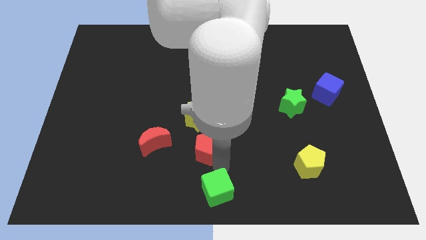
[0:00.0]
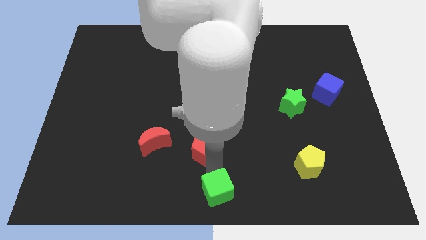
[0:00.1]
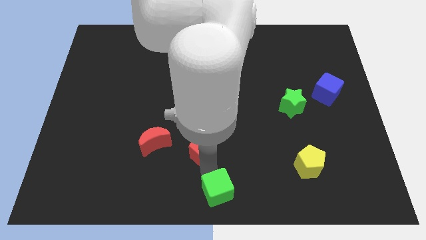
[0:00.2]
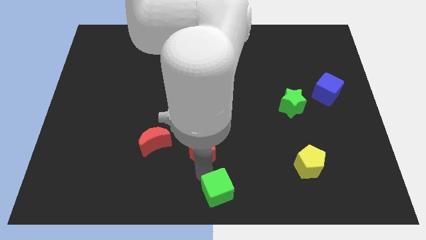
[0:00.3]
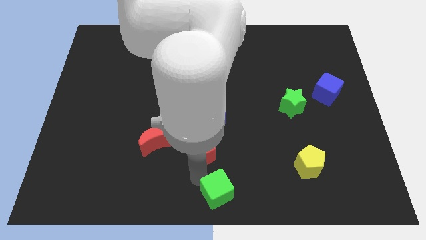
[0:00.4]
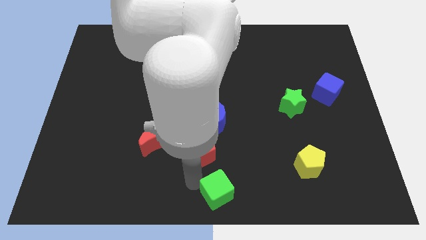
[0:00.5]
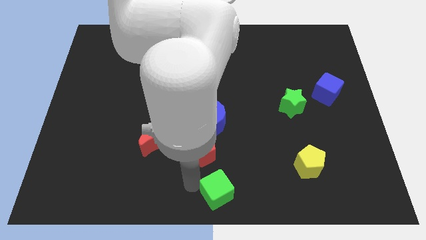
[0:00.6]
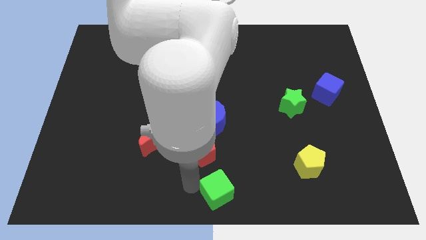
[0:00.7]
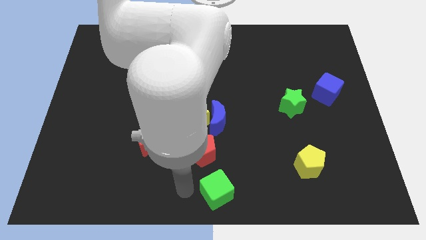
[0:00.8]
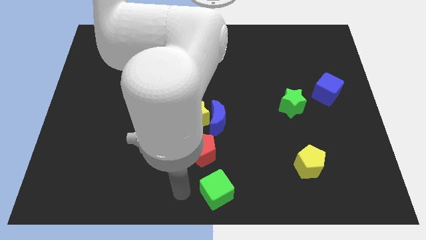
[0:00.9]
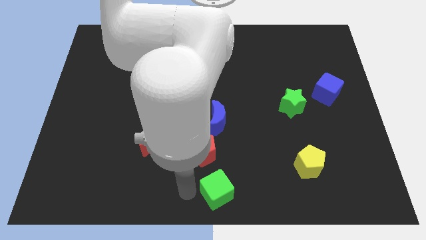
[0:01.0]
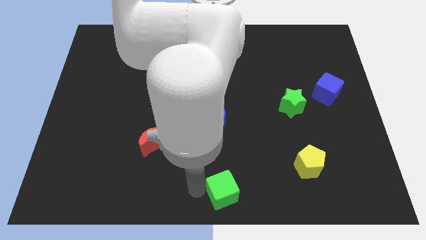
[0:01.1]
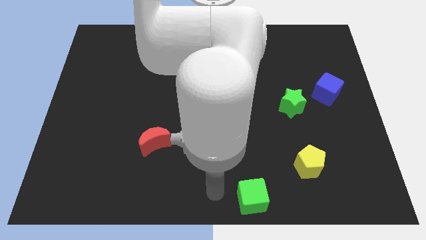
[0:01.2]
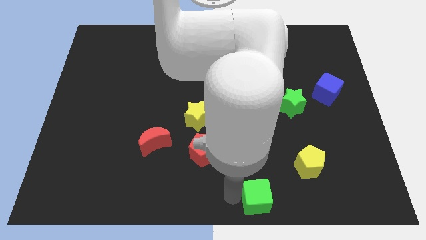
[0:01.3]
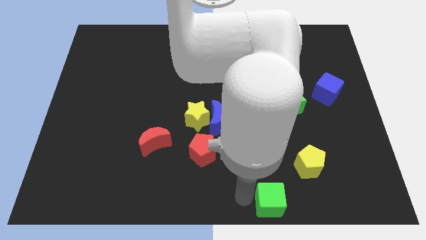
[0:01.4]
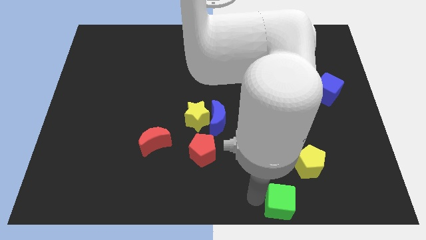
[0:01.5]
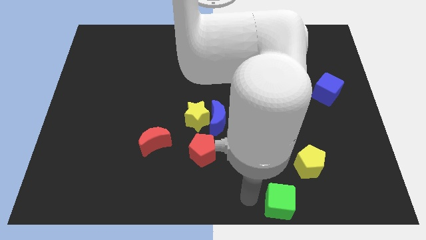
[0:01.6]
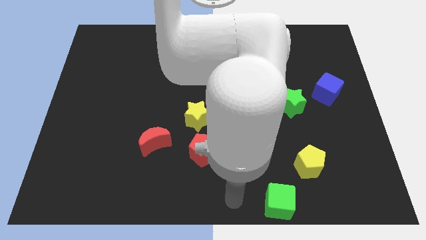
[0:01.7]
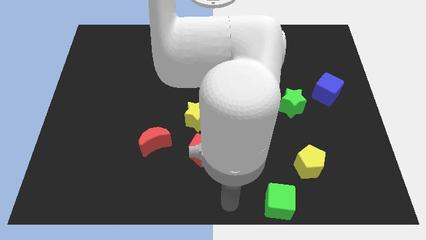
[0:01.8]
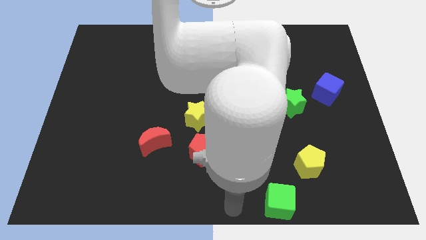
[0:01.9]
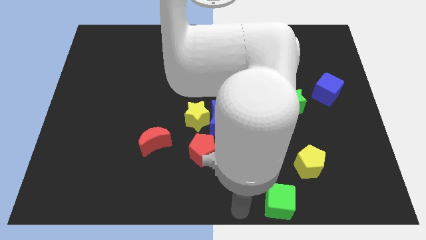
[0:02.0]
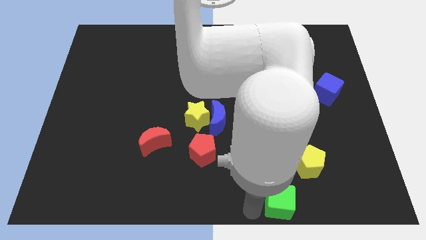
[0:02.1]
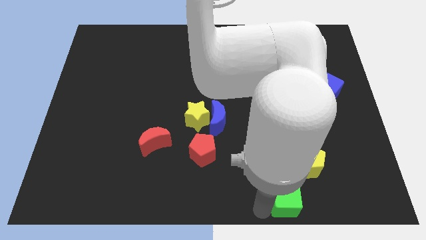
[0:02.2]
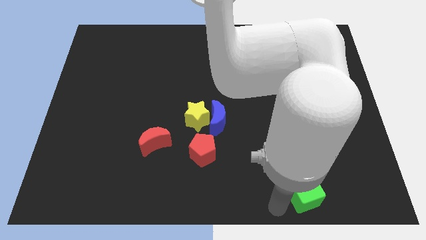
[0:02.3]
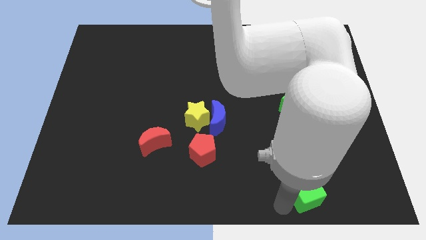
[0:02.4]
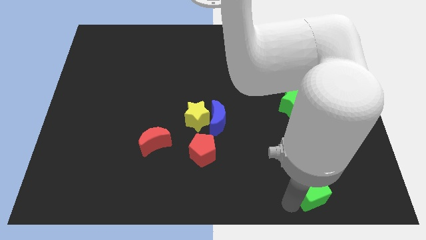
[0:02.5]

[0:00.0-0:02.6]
place the green cube down to the yellow pentagon

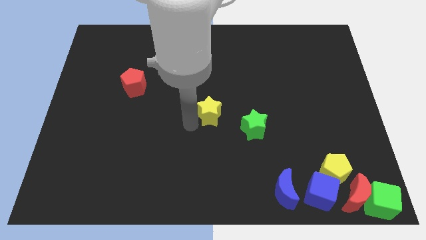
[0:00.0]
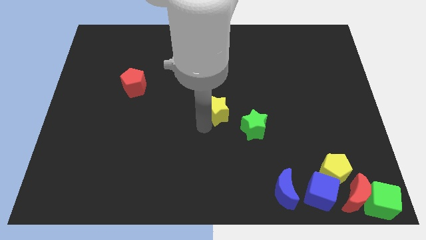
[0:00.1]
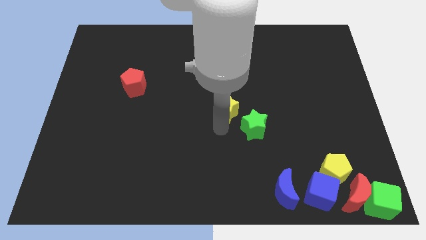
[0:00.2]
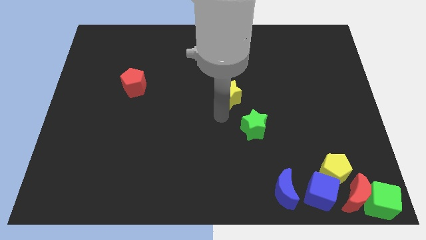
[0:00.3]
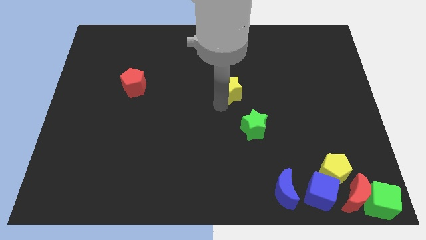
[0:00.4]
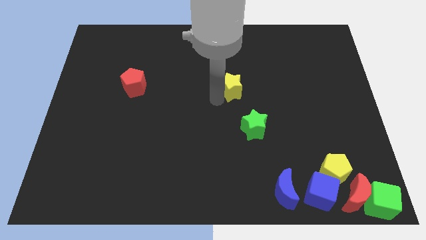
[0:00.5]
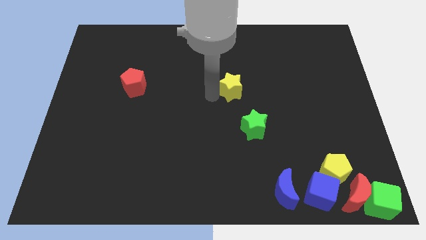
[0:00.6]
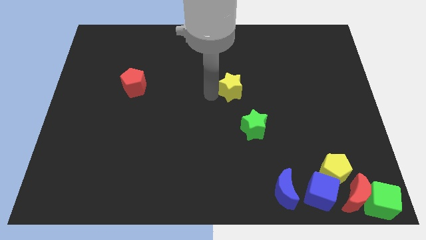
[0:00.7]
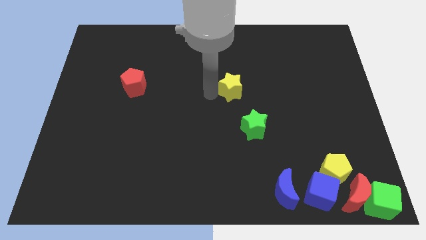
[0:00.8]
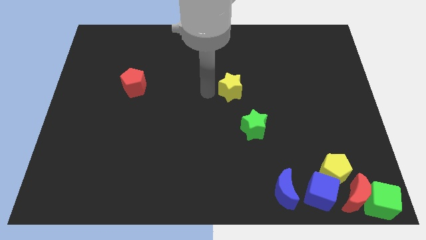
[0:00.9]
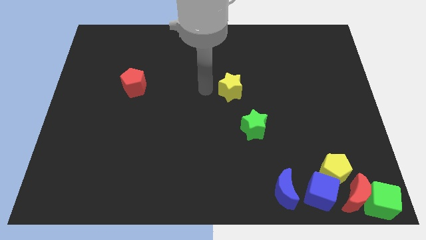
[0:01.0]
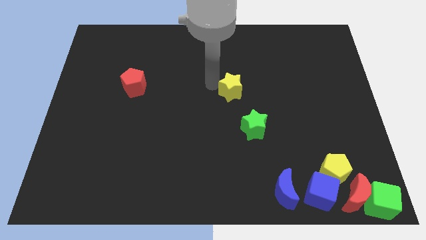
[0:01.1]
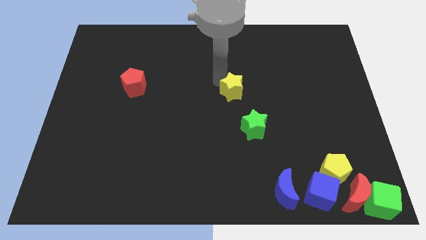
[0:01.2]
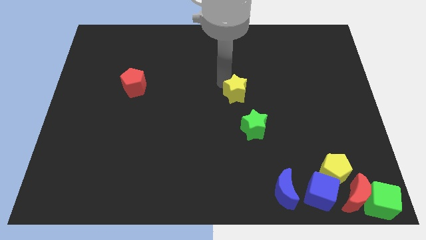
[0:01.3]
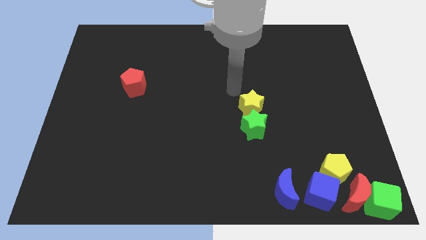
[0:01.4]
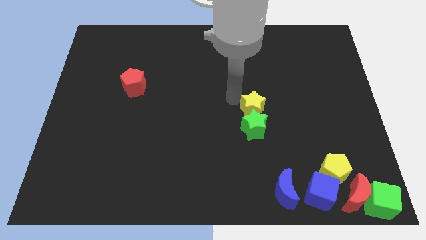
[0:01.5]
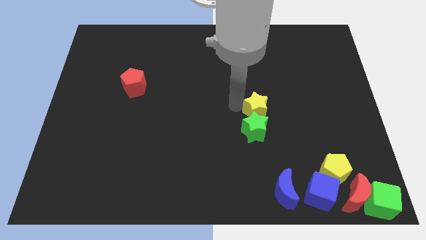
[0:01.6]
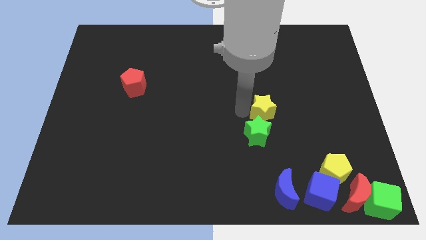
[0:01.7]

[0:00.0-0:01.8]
push the yellow star into the green star

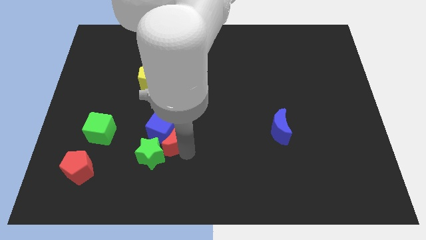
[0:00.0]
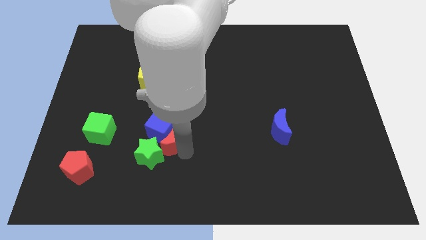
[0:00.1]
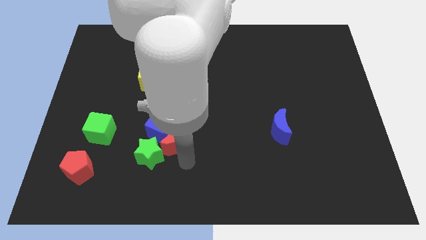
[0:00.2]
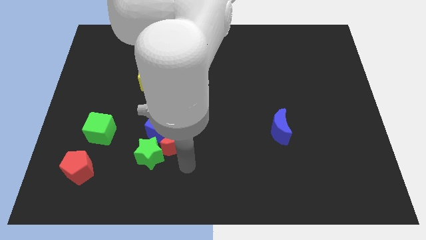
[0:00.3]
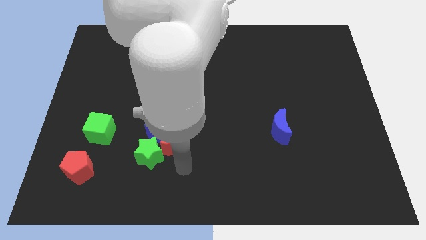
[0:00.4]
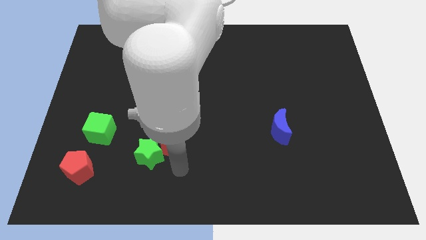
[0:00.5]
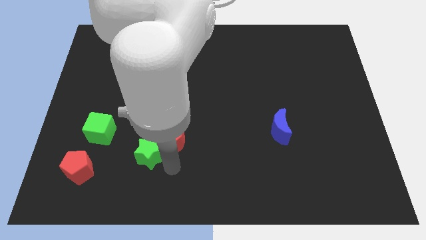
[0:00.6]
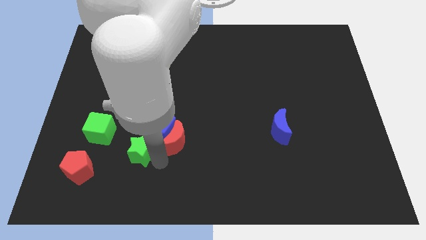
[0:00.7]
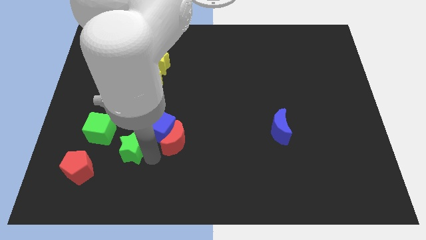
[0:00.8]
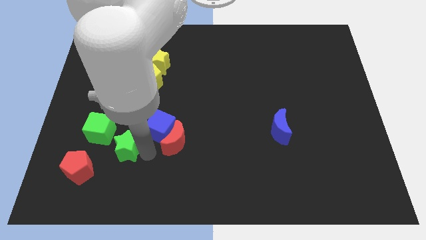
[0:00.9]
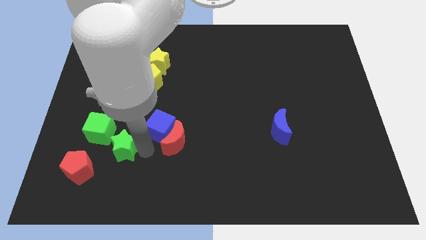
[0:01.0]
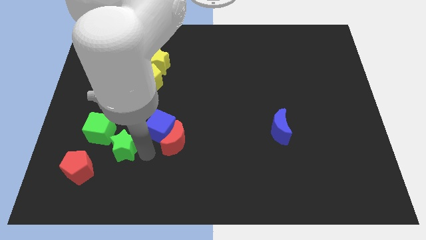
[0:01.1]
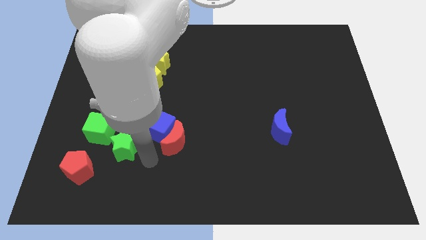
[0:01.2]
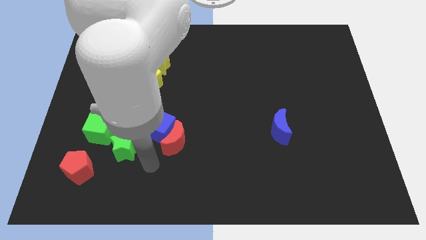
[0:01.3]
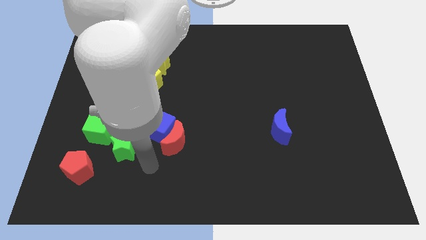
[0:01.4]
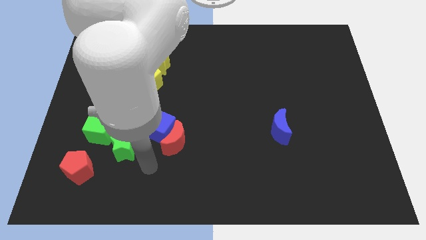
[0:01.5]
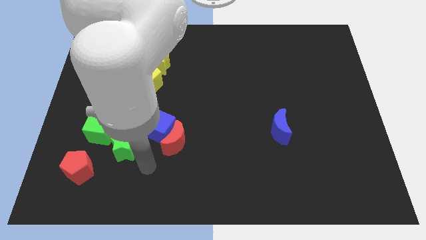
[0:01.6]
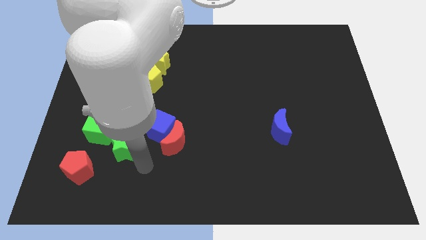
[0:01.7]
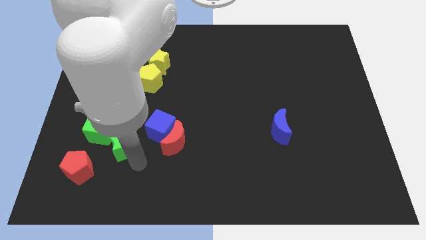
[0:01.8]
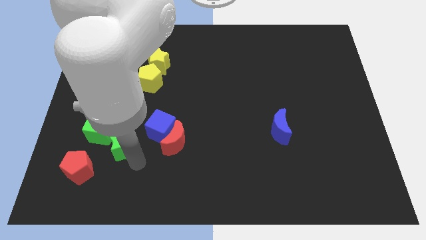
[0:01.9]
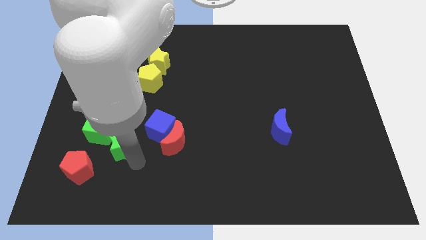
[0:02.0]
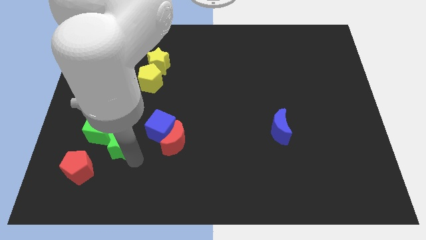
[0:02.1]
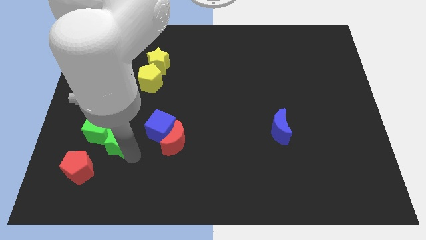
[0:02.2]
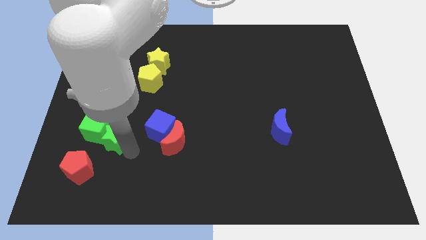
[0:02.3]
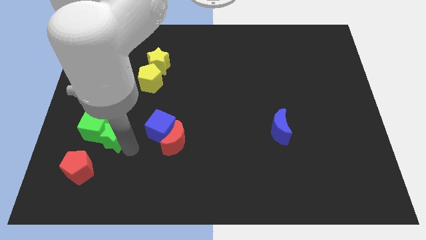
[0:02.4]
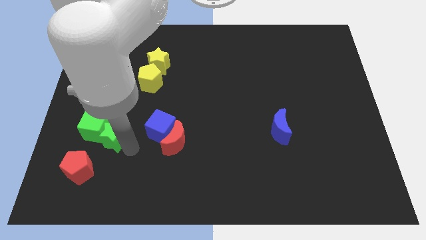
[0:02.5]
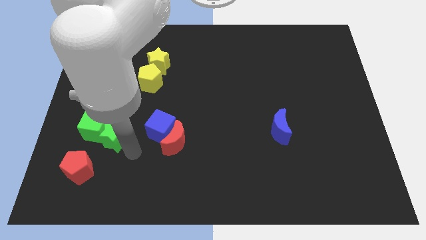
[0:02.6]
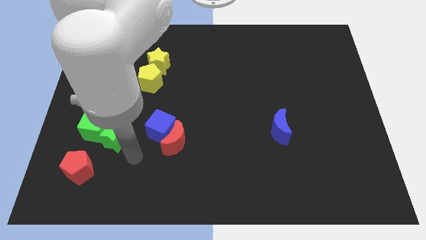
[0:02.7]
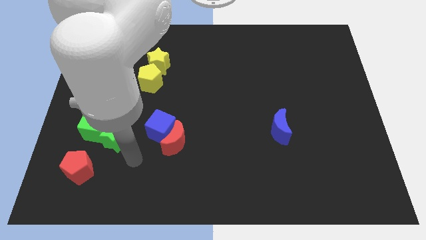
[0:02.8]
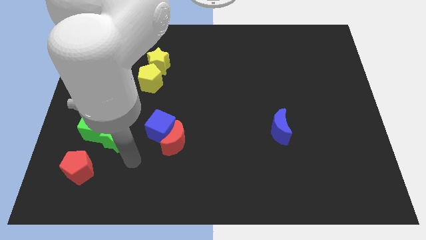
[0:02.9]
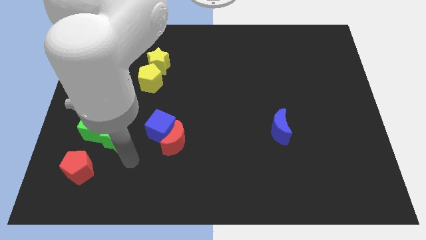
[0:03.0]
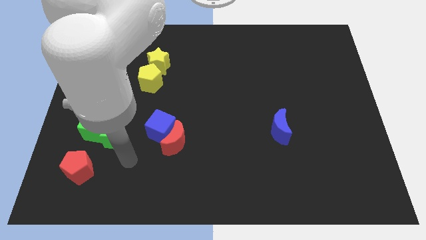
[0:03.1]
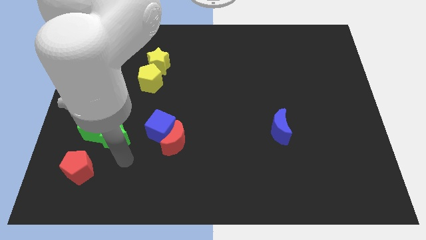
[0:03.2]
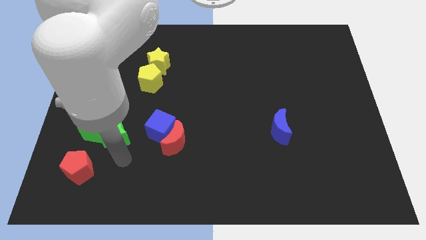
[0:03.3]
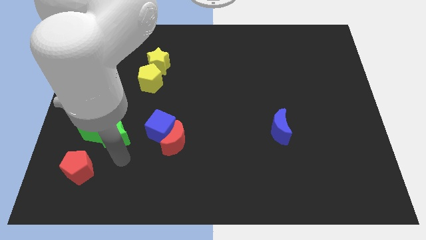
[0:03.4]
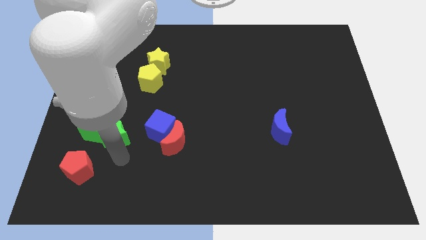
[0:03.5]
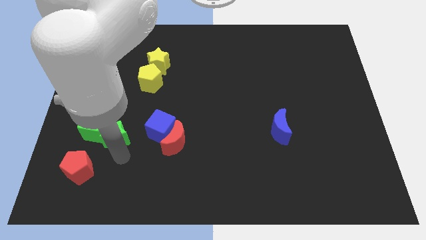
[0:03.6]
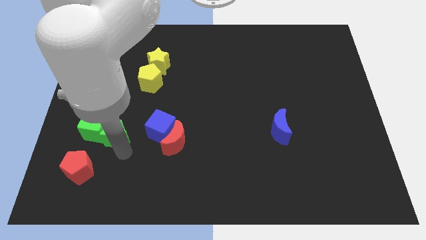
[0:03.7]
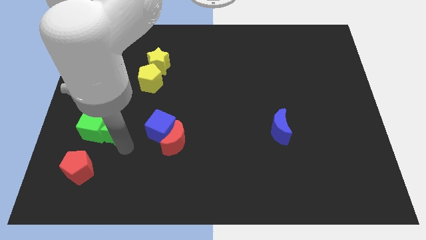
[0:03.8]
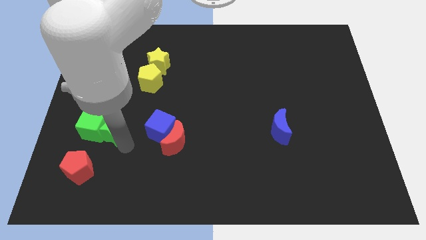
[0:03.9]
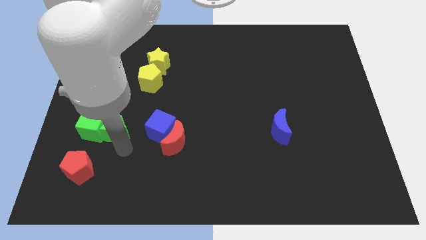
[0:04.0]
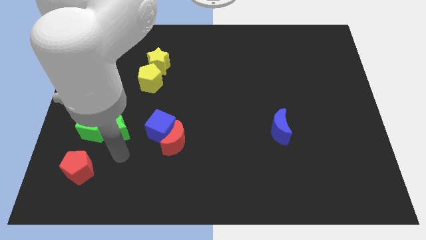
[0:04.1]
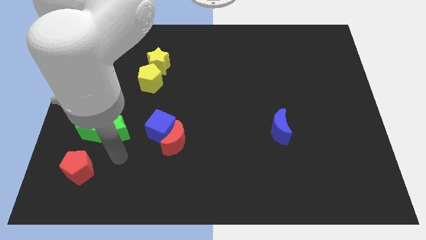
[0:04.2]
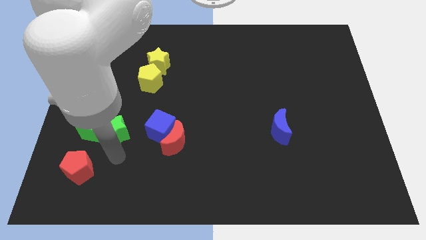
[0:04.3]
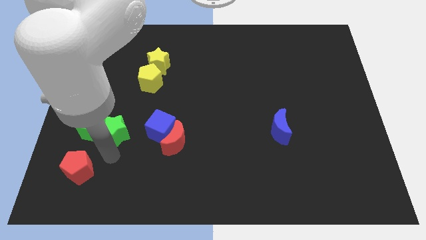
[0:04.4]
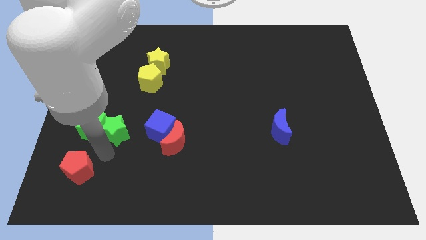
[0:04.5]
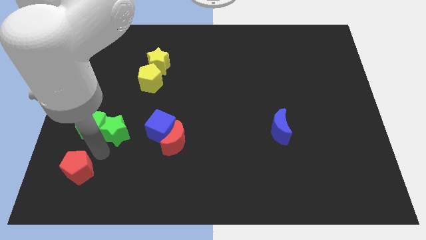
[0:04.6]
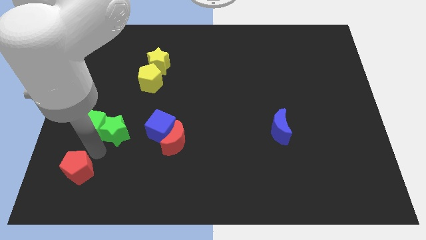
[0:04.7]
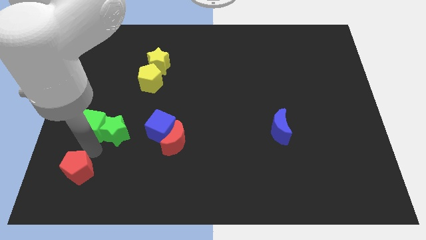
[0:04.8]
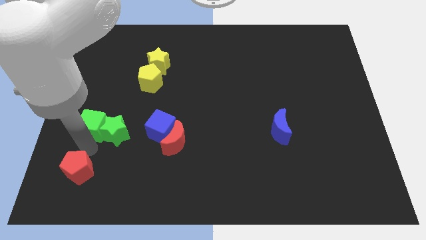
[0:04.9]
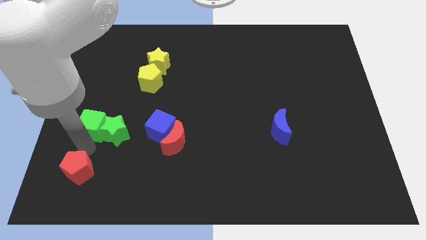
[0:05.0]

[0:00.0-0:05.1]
push the green star into the green cube
